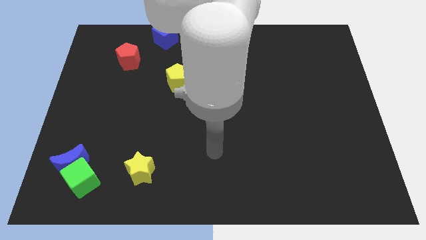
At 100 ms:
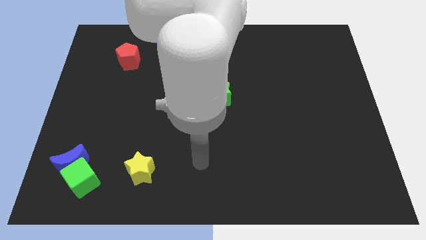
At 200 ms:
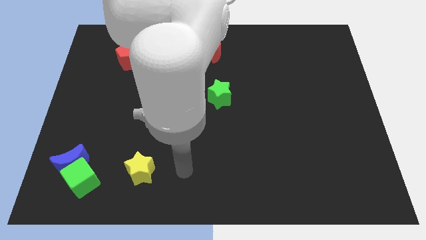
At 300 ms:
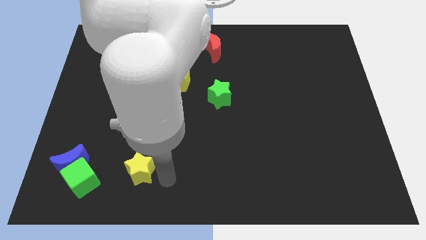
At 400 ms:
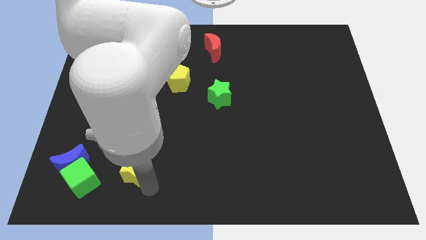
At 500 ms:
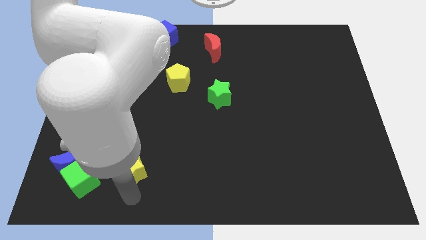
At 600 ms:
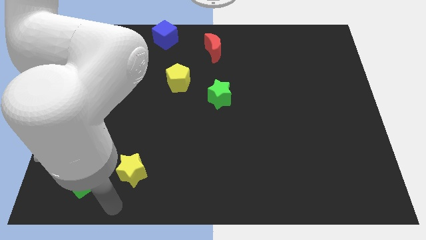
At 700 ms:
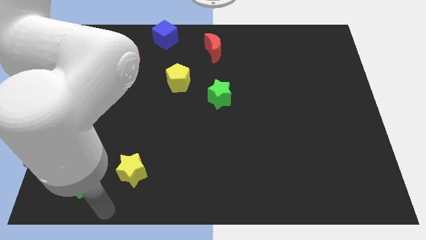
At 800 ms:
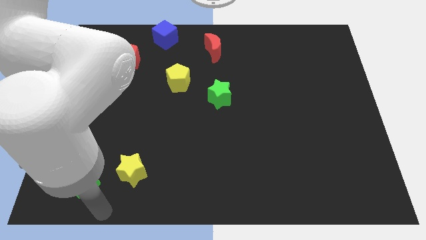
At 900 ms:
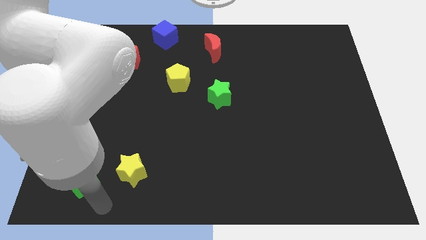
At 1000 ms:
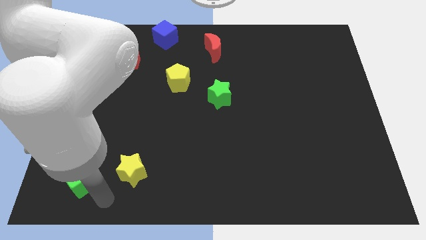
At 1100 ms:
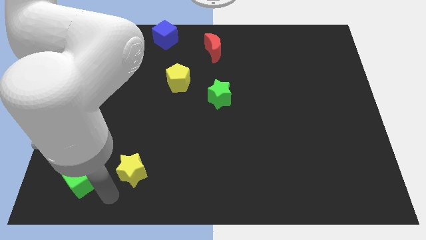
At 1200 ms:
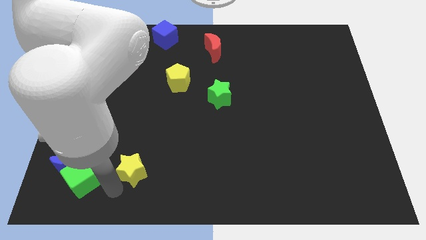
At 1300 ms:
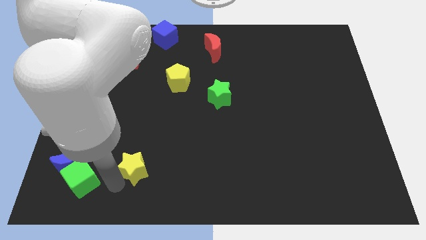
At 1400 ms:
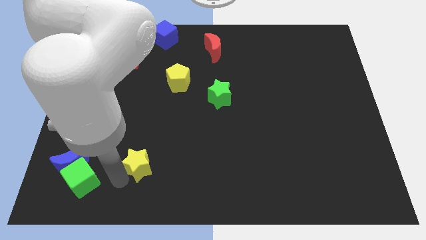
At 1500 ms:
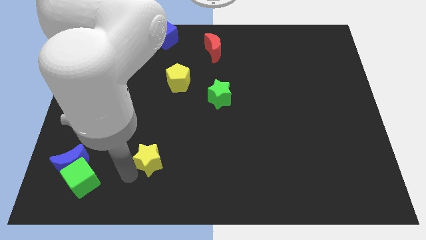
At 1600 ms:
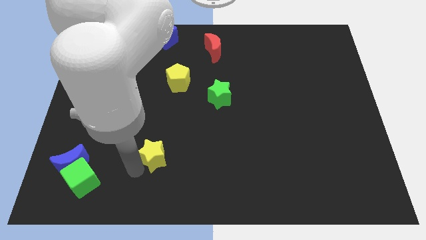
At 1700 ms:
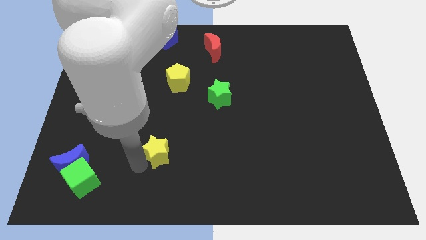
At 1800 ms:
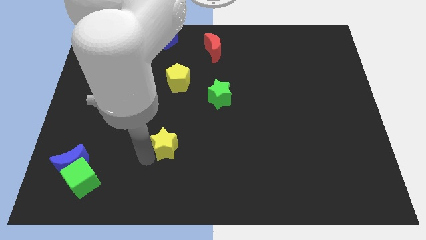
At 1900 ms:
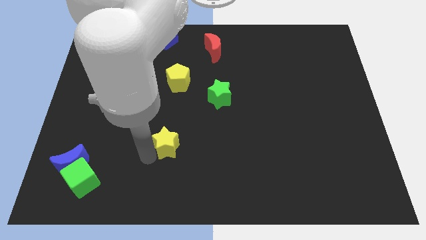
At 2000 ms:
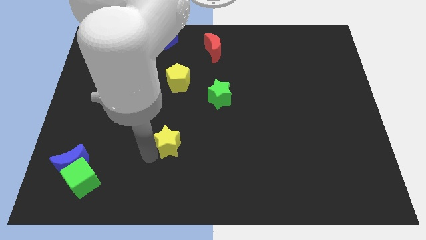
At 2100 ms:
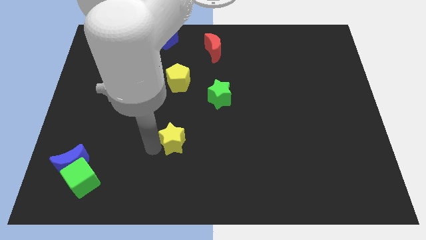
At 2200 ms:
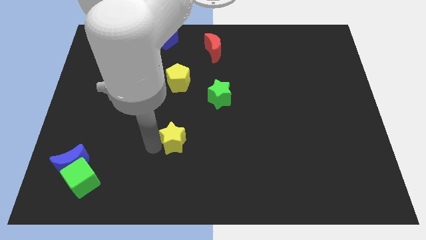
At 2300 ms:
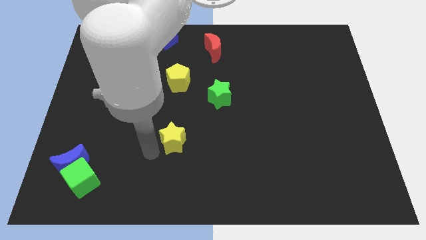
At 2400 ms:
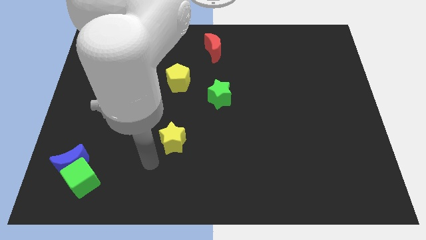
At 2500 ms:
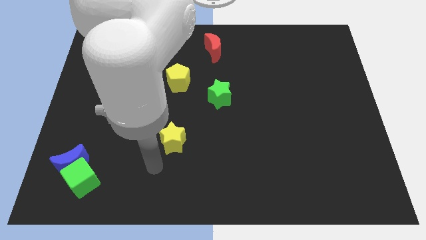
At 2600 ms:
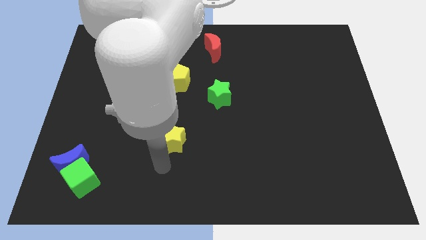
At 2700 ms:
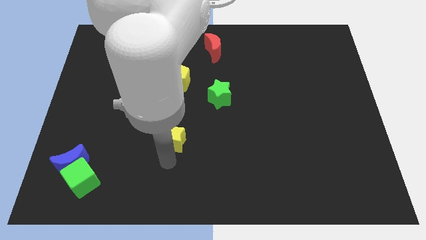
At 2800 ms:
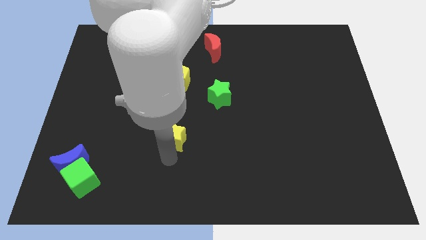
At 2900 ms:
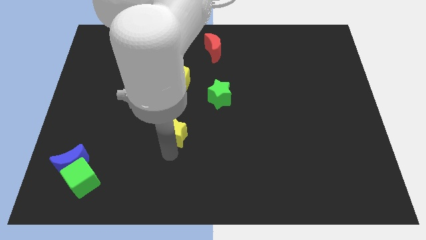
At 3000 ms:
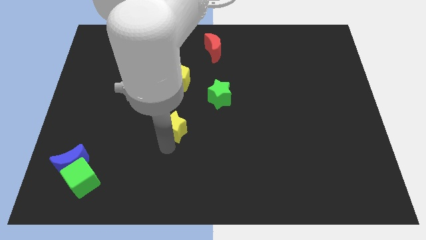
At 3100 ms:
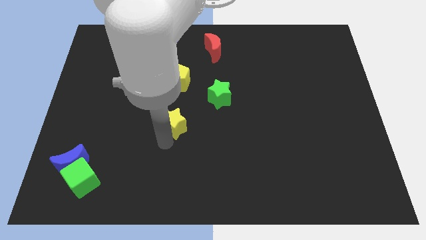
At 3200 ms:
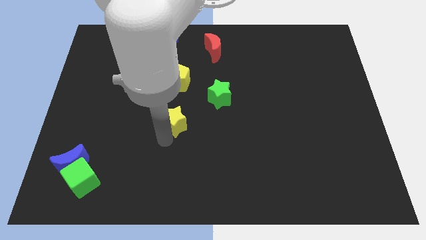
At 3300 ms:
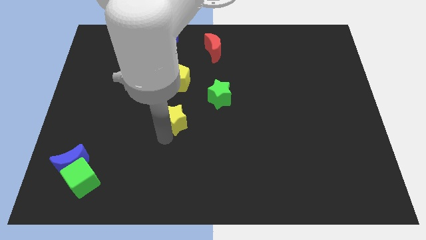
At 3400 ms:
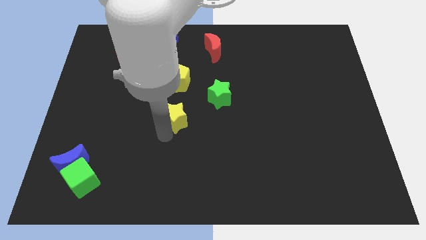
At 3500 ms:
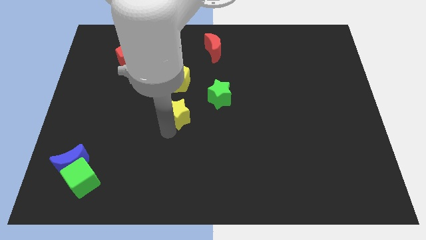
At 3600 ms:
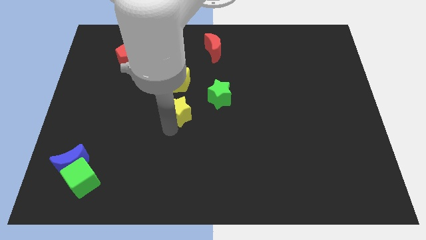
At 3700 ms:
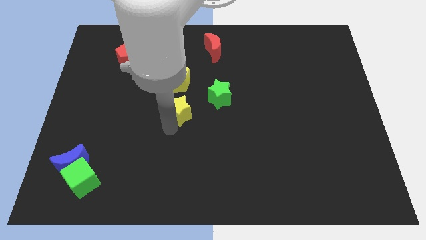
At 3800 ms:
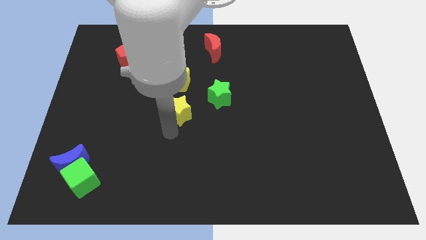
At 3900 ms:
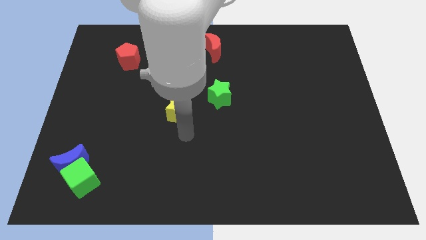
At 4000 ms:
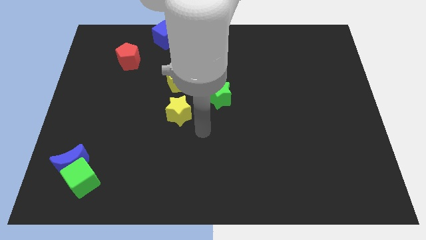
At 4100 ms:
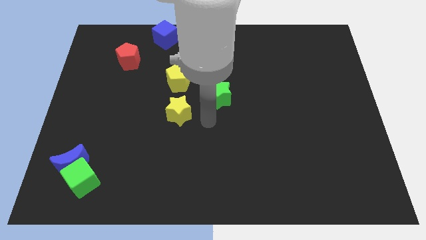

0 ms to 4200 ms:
slide the yellow star towards the bottom side of the yellow pentagon

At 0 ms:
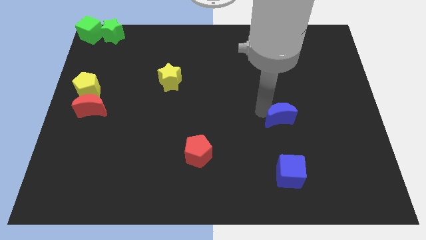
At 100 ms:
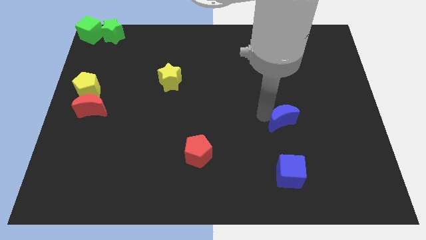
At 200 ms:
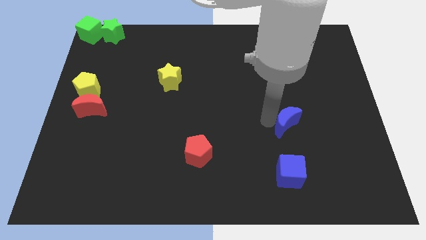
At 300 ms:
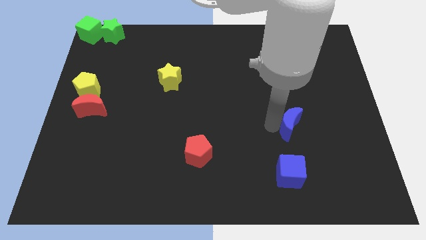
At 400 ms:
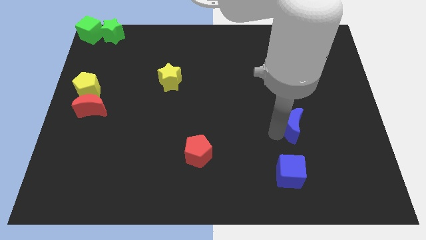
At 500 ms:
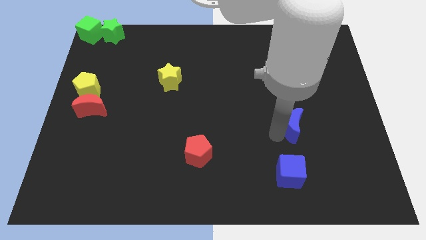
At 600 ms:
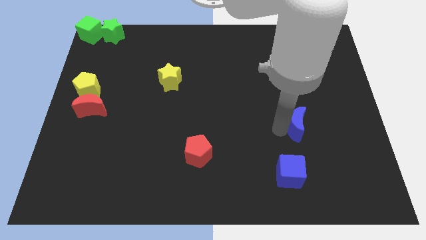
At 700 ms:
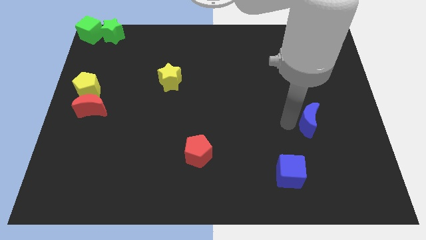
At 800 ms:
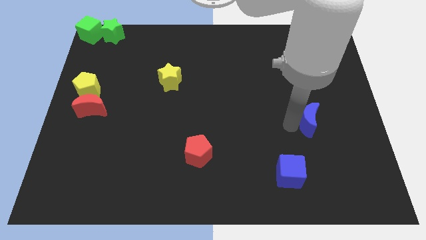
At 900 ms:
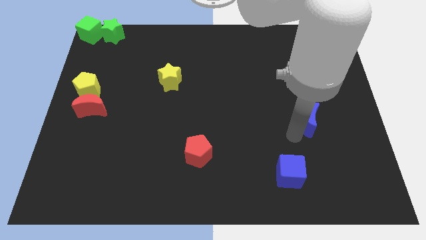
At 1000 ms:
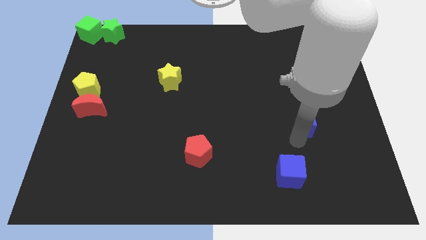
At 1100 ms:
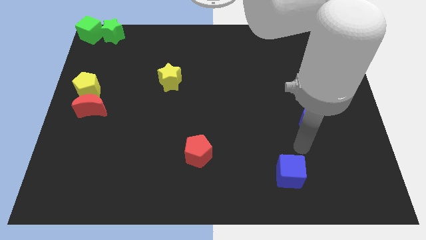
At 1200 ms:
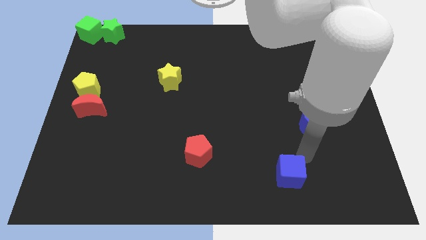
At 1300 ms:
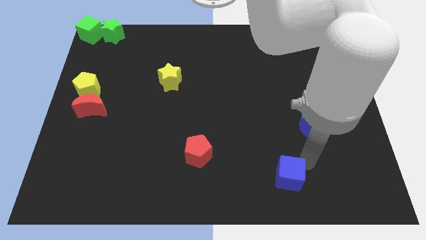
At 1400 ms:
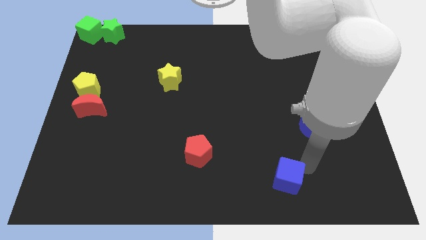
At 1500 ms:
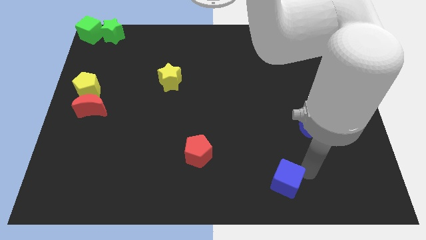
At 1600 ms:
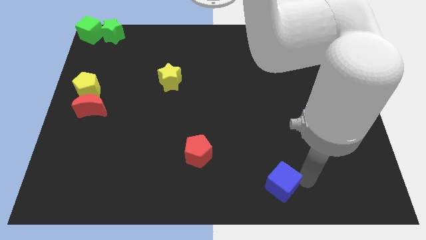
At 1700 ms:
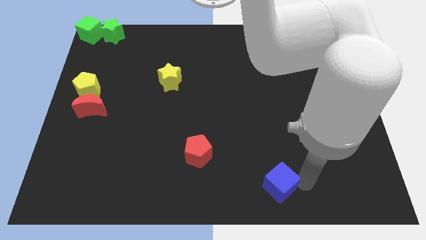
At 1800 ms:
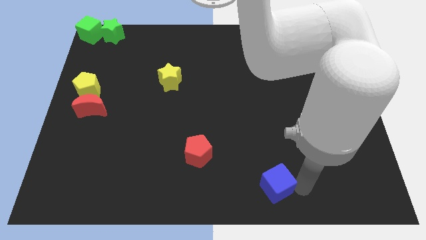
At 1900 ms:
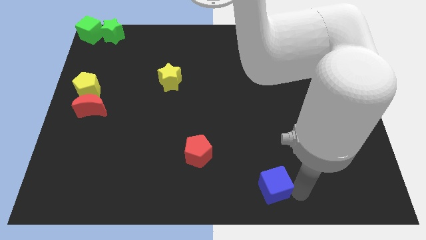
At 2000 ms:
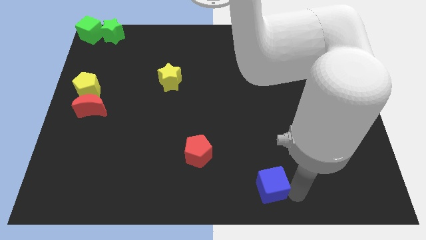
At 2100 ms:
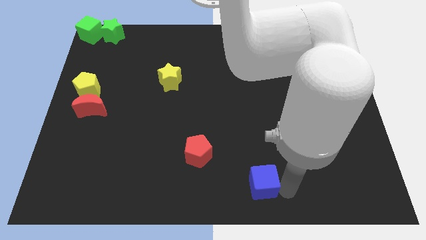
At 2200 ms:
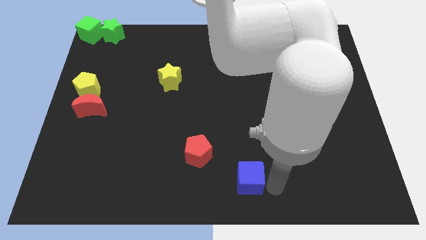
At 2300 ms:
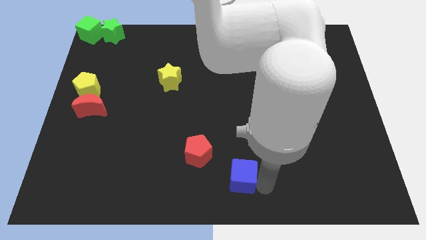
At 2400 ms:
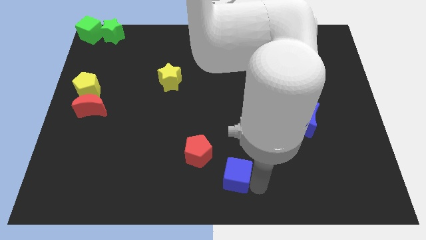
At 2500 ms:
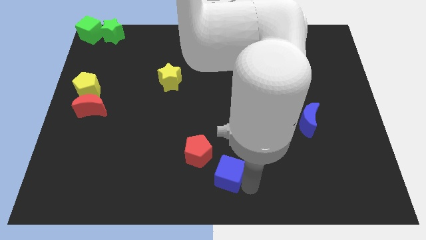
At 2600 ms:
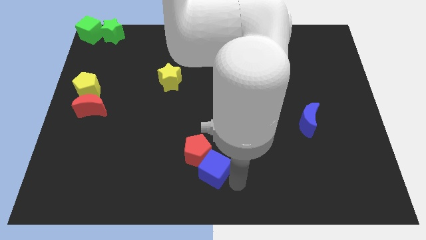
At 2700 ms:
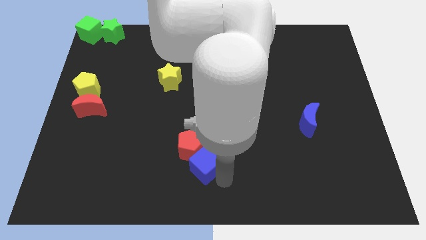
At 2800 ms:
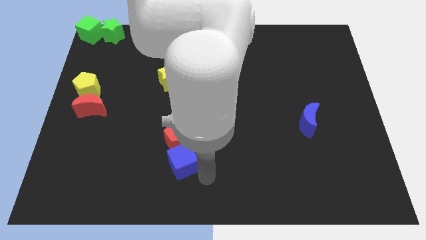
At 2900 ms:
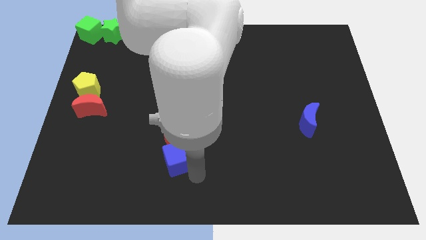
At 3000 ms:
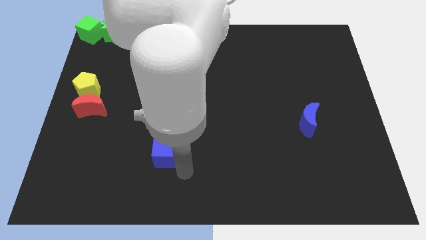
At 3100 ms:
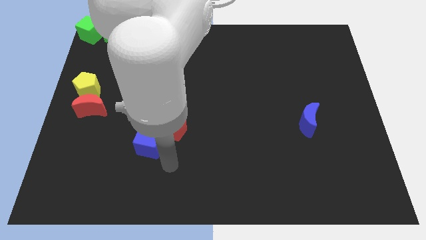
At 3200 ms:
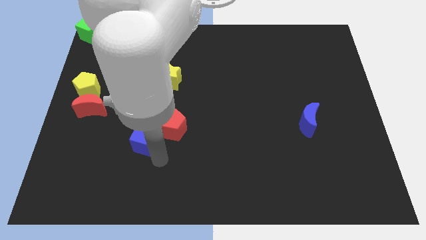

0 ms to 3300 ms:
push blue cube in to red pentagon

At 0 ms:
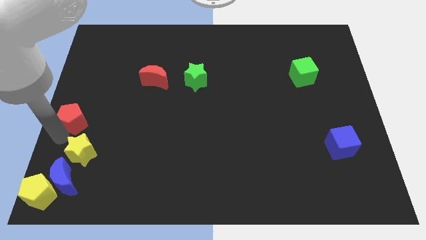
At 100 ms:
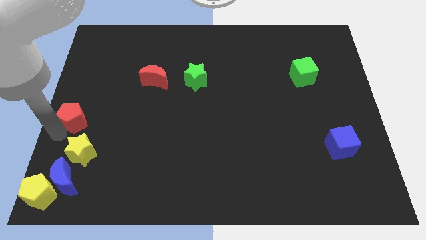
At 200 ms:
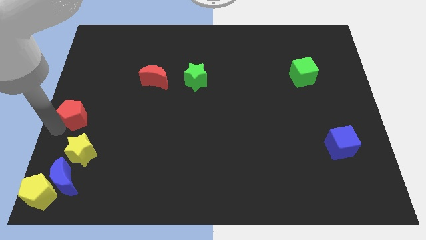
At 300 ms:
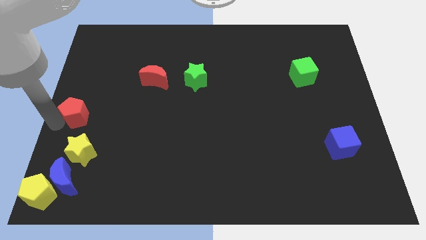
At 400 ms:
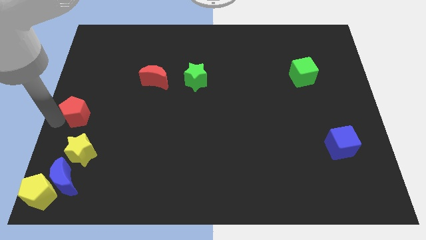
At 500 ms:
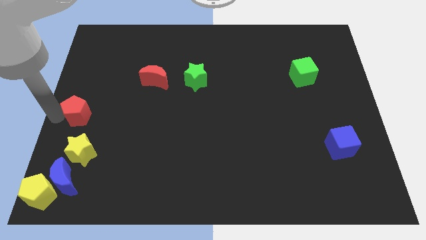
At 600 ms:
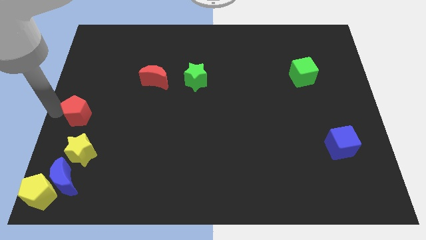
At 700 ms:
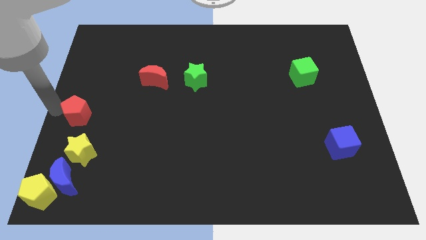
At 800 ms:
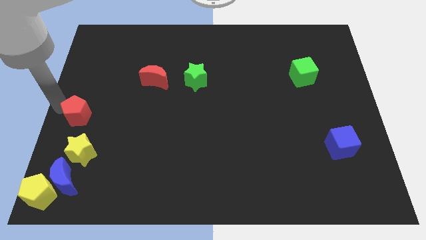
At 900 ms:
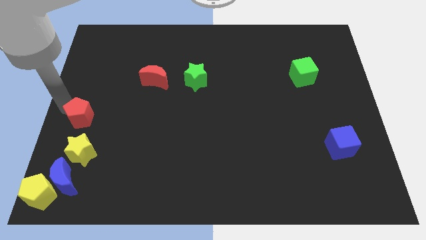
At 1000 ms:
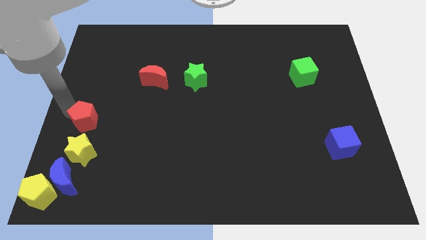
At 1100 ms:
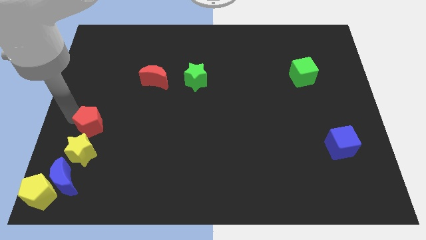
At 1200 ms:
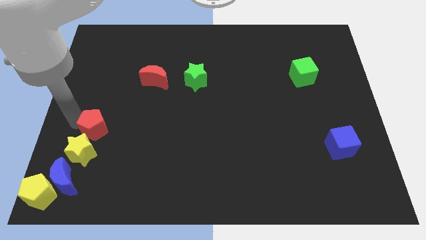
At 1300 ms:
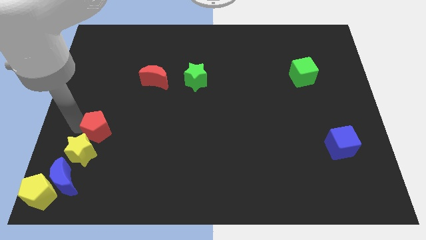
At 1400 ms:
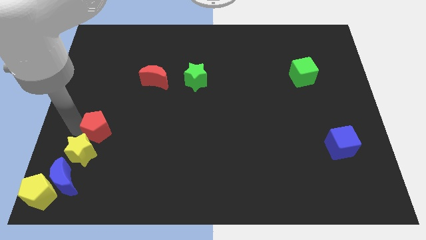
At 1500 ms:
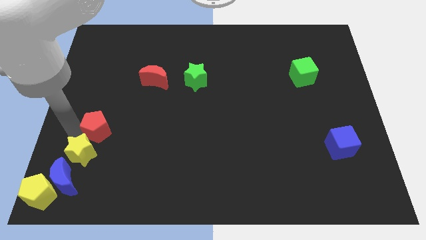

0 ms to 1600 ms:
place the red pentagon above the yellow star
